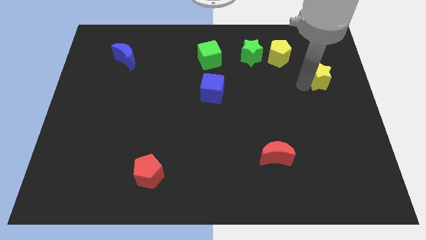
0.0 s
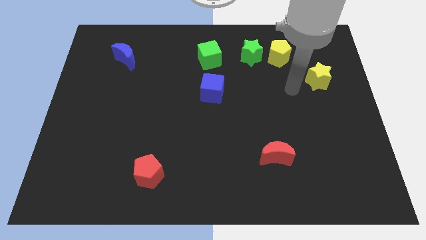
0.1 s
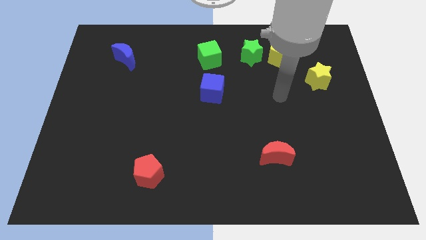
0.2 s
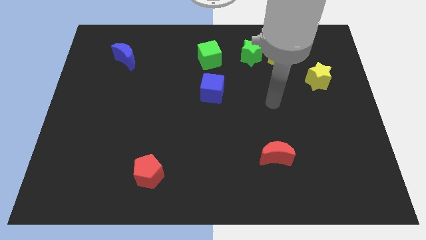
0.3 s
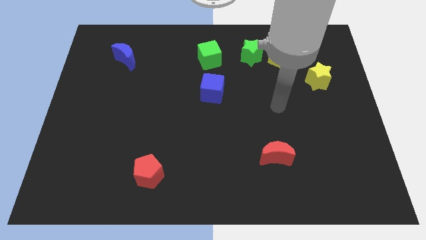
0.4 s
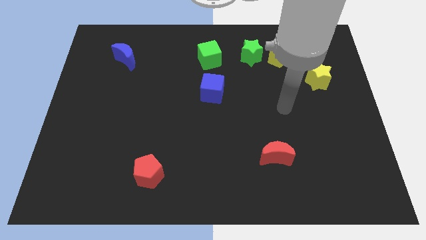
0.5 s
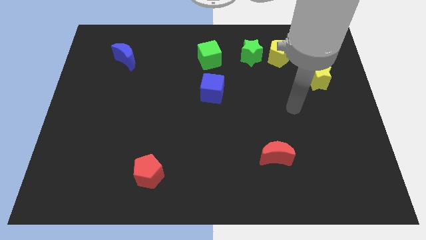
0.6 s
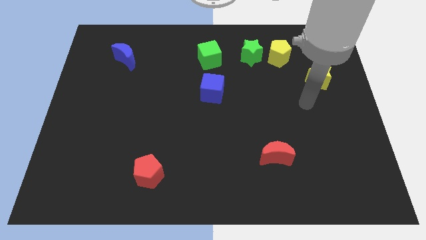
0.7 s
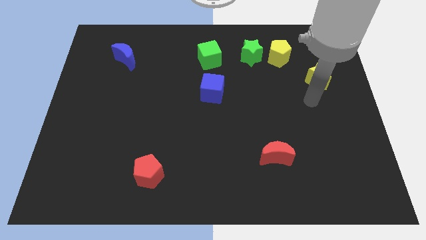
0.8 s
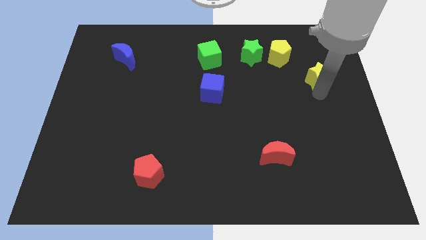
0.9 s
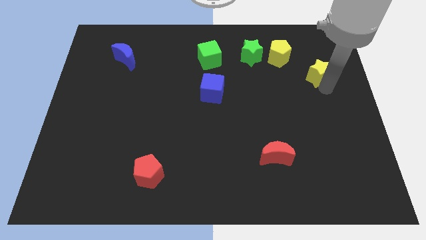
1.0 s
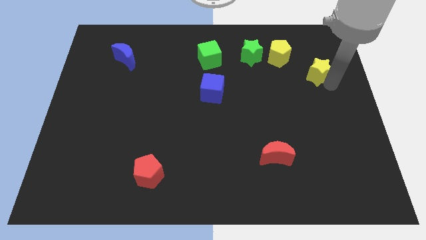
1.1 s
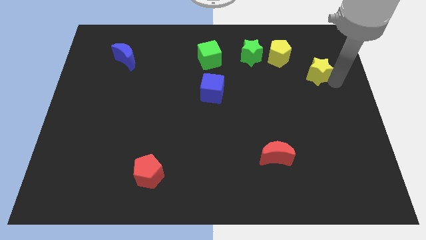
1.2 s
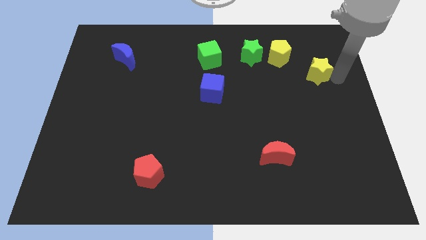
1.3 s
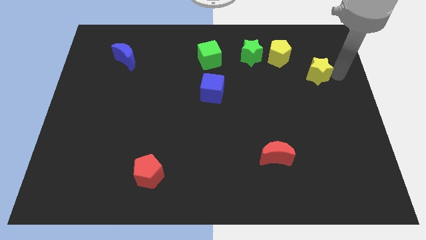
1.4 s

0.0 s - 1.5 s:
point your arm right to yellow star

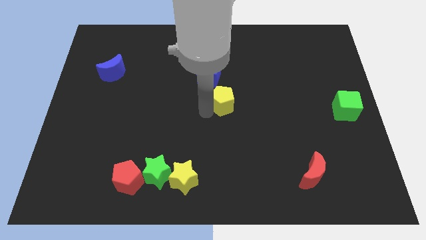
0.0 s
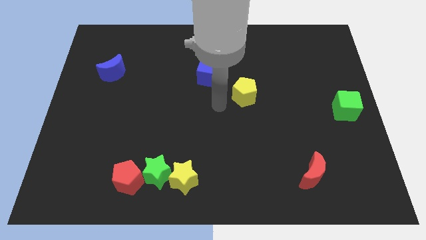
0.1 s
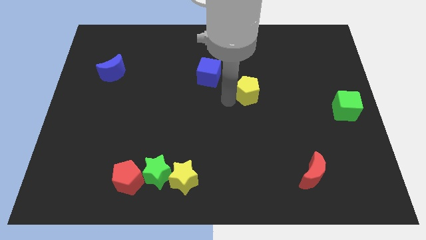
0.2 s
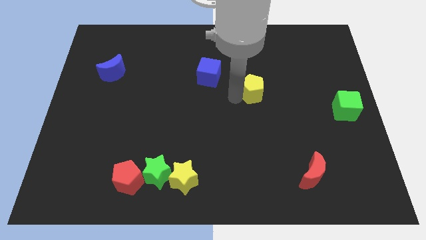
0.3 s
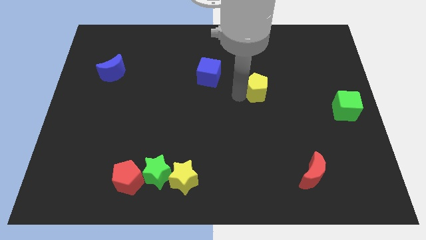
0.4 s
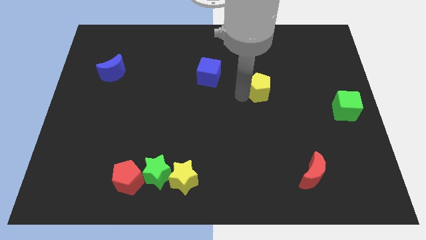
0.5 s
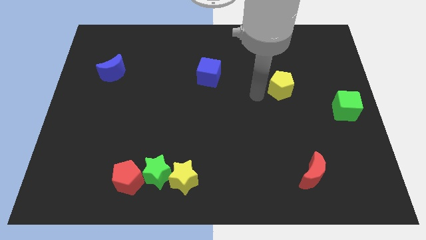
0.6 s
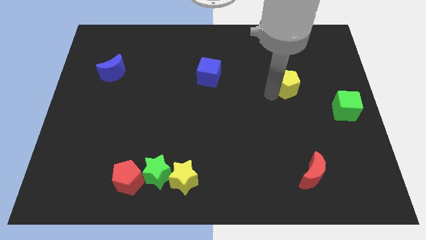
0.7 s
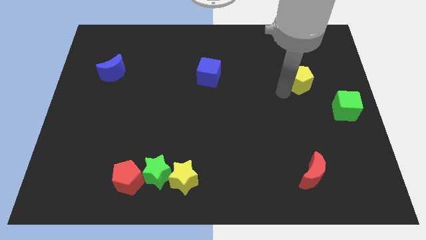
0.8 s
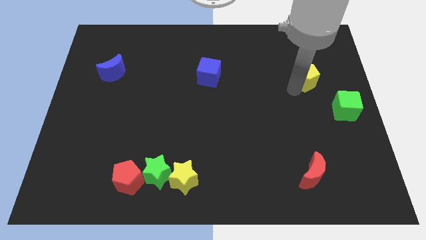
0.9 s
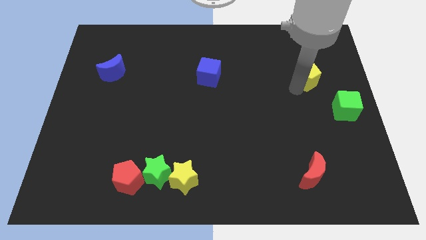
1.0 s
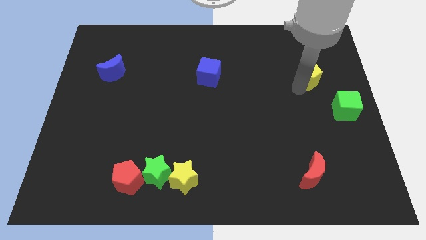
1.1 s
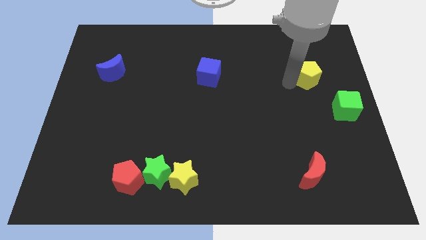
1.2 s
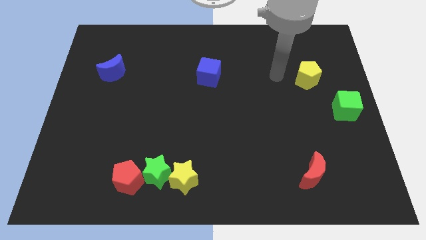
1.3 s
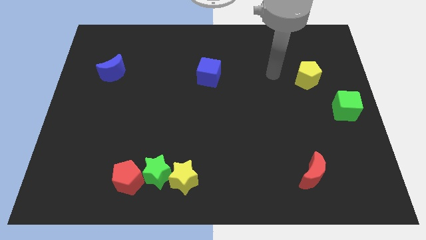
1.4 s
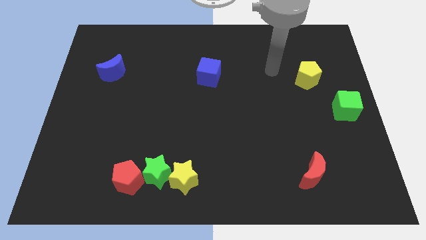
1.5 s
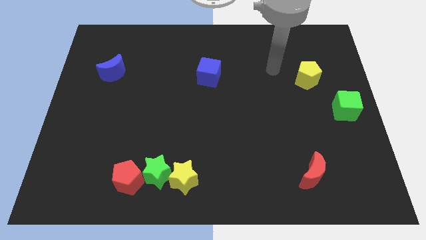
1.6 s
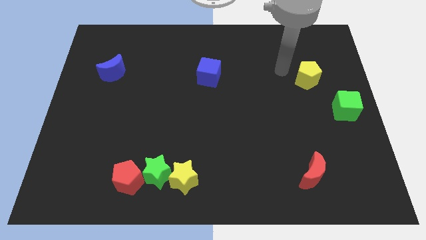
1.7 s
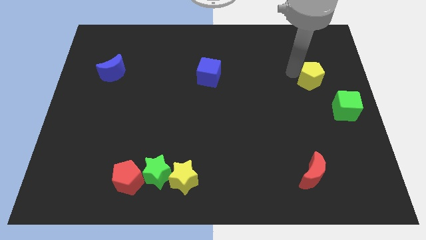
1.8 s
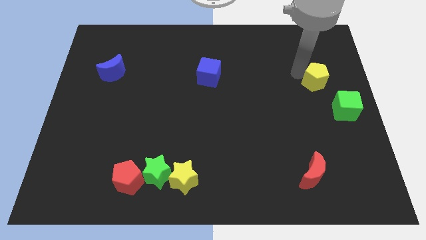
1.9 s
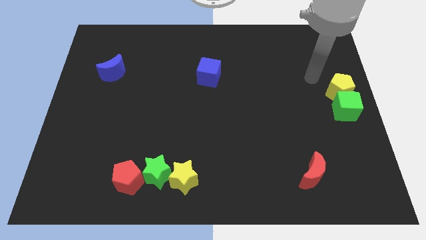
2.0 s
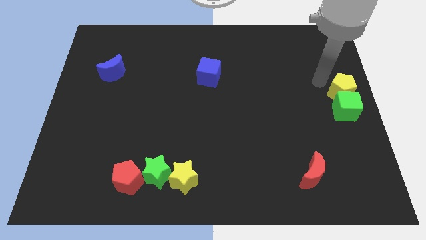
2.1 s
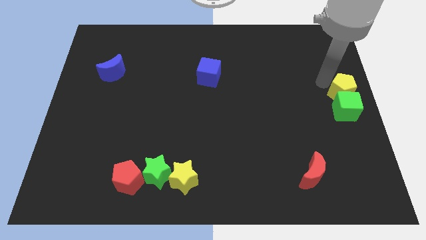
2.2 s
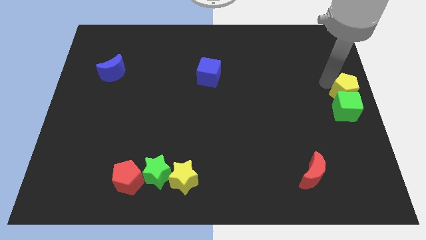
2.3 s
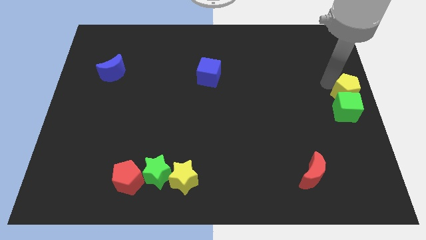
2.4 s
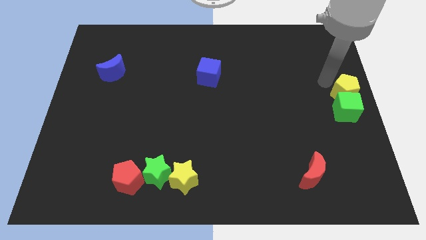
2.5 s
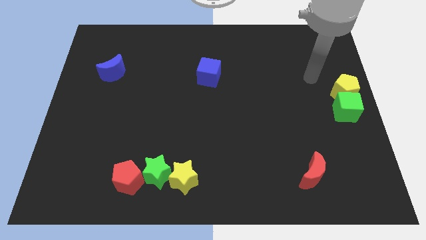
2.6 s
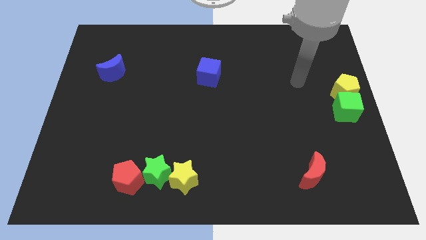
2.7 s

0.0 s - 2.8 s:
move the yellow pentagon to the top of green cube

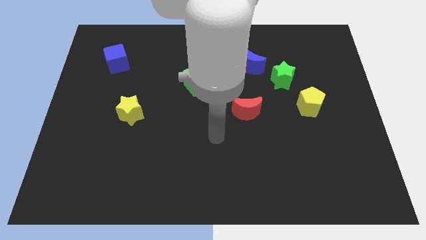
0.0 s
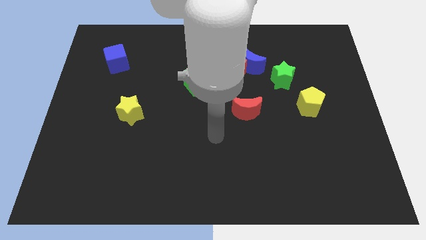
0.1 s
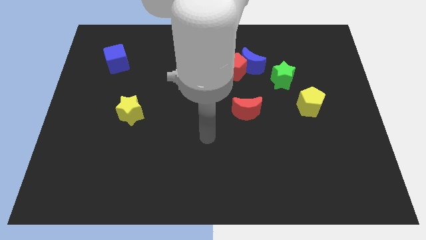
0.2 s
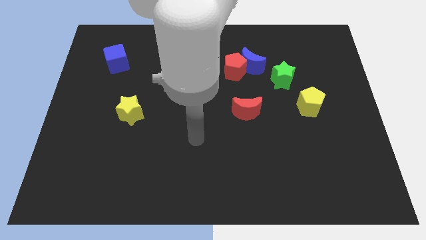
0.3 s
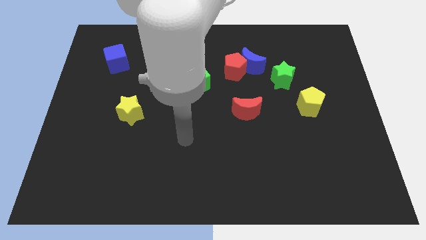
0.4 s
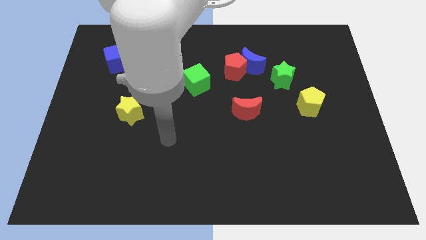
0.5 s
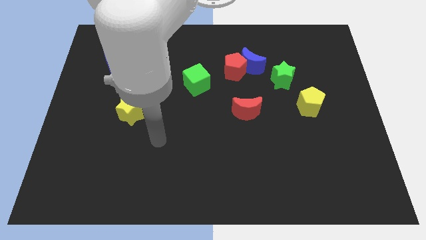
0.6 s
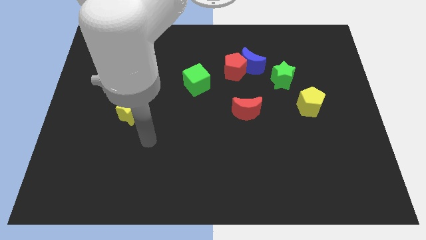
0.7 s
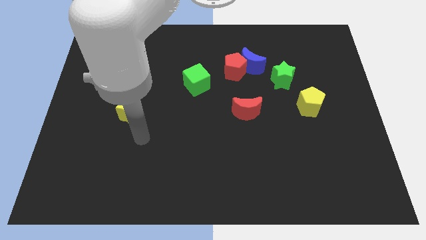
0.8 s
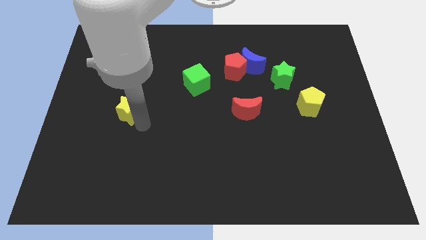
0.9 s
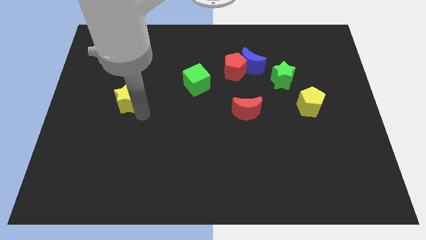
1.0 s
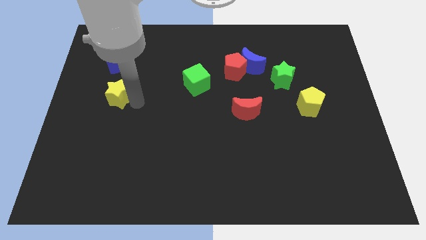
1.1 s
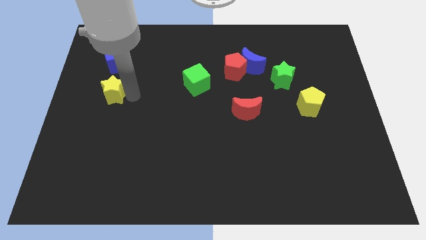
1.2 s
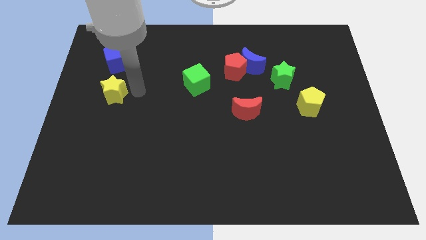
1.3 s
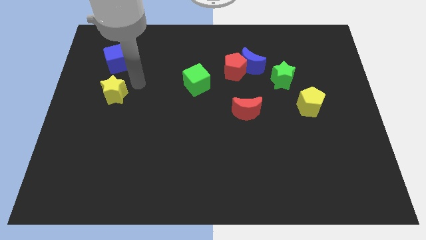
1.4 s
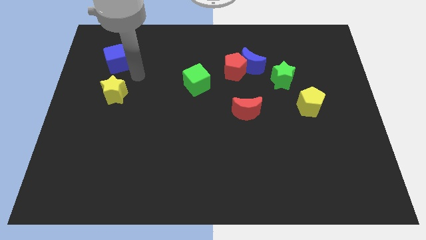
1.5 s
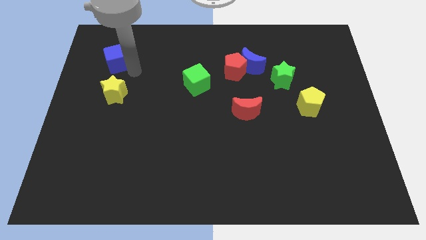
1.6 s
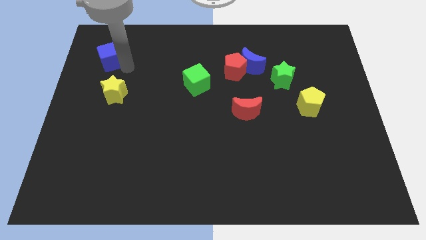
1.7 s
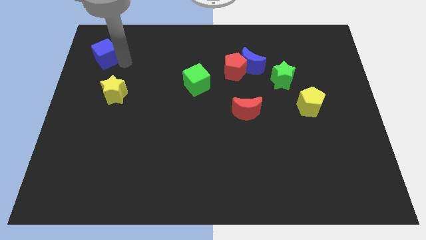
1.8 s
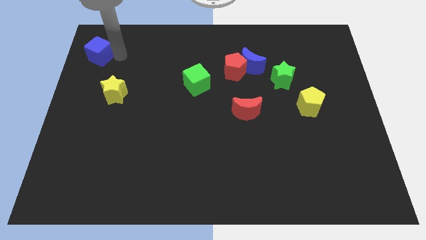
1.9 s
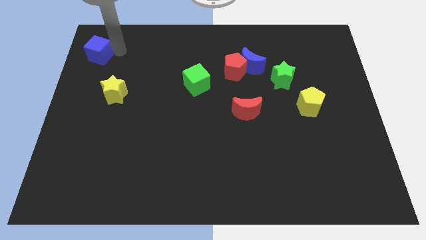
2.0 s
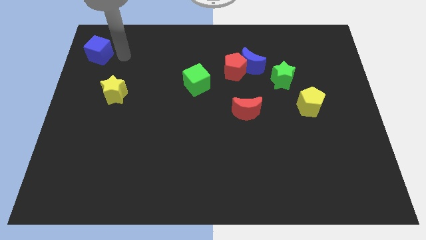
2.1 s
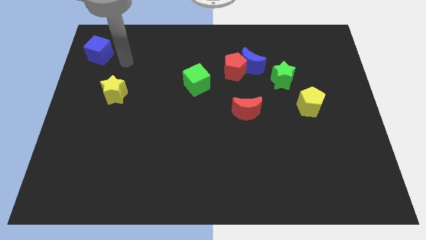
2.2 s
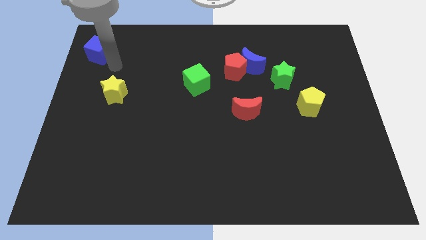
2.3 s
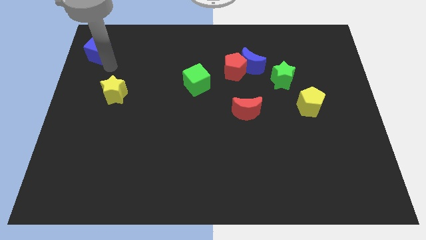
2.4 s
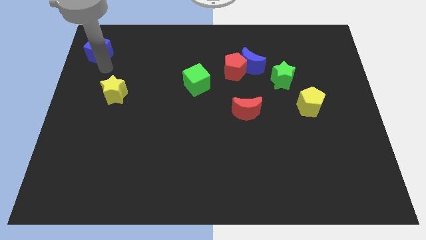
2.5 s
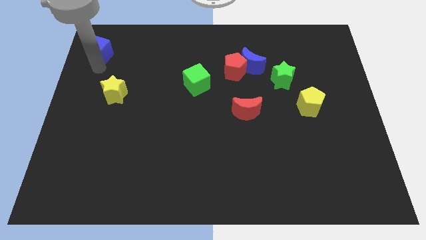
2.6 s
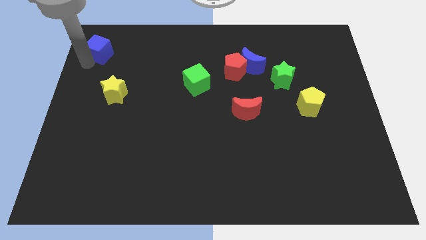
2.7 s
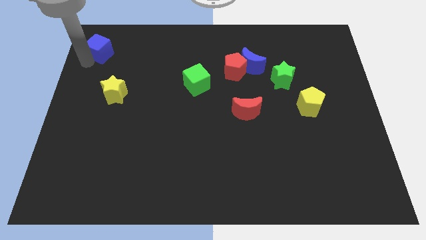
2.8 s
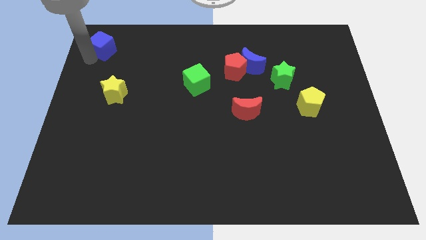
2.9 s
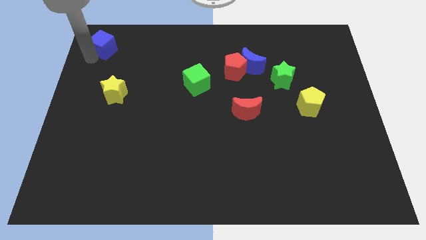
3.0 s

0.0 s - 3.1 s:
move the yellow star and blue cube to the top left of the table

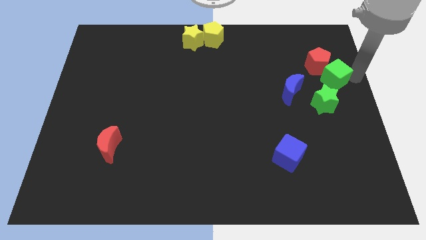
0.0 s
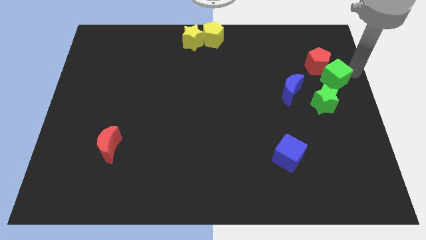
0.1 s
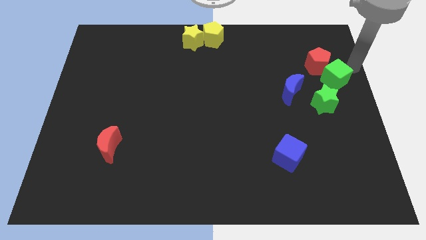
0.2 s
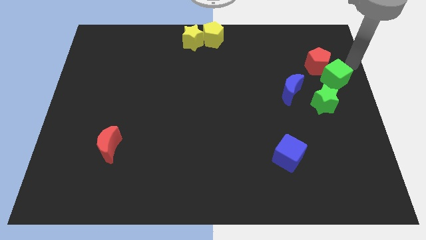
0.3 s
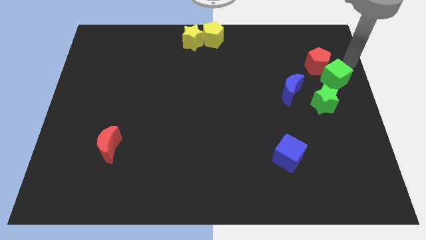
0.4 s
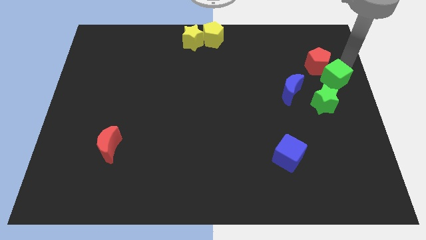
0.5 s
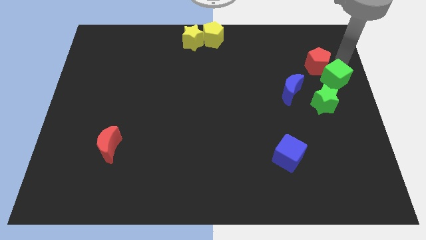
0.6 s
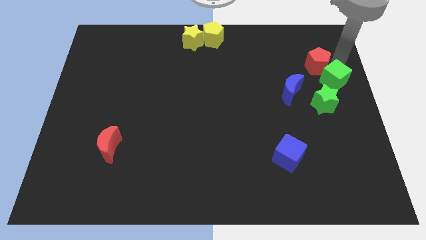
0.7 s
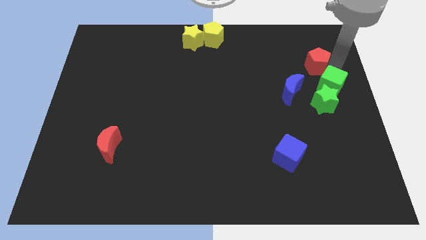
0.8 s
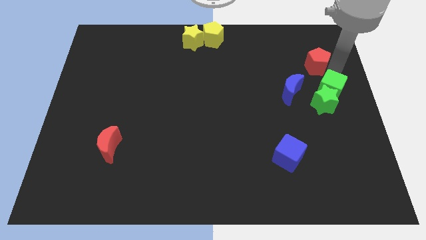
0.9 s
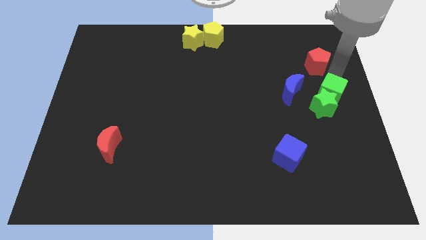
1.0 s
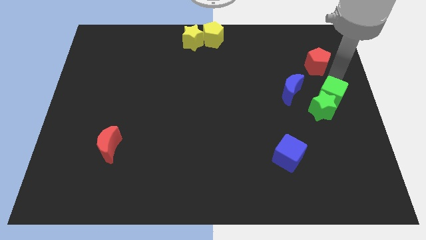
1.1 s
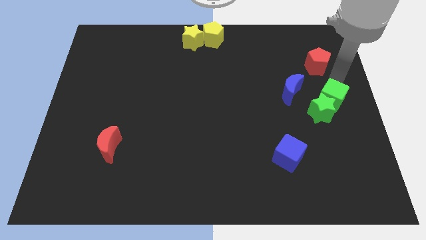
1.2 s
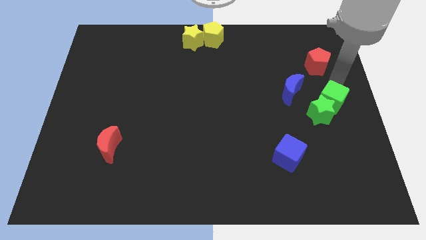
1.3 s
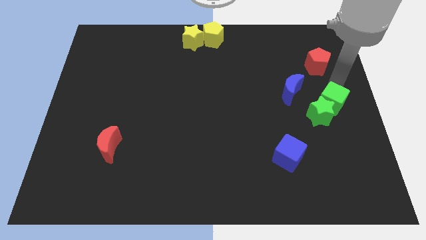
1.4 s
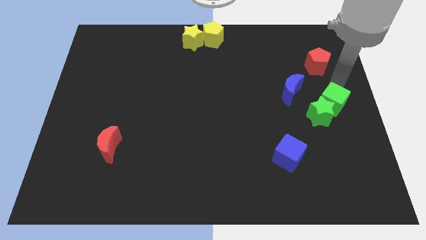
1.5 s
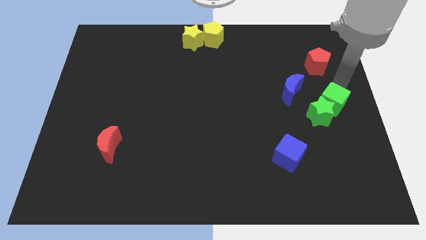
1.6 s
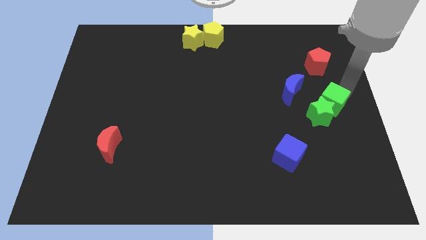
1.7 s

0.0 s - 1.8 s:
move the green blocks slightly to the bottom of the board
